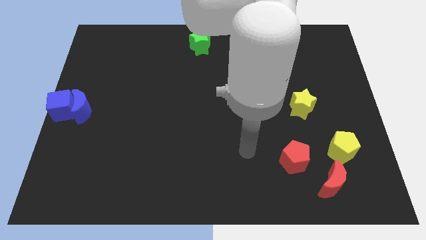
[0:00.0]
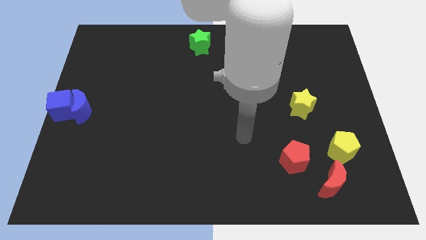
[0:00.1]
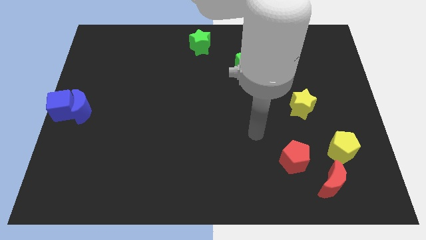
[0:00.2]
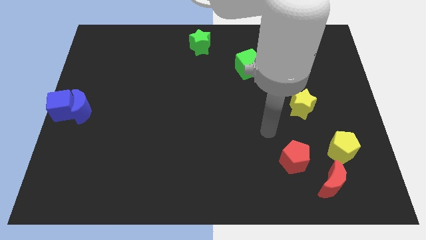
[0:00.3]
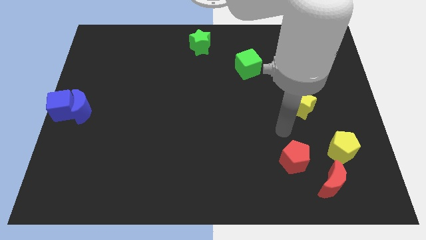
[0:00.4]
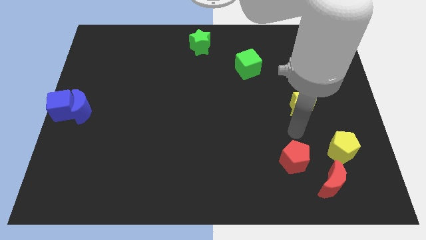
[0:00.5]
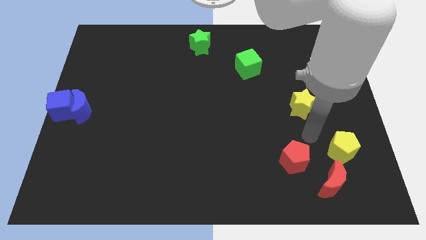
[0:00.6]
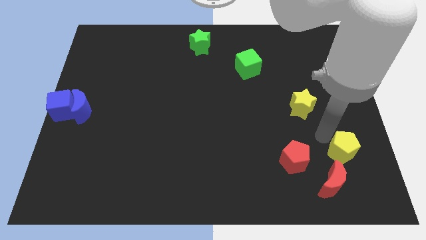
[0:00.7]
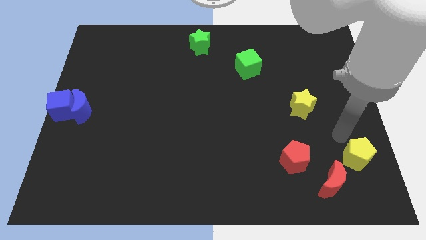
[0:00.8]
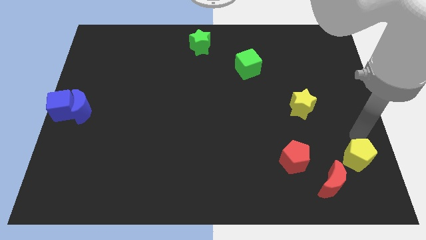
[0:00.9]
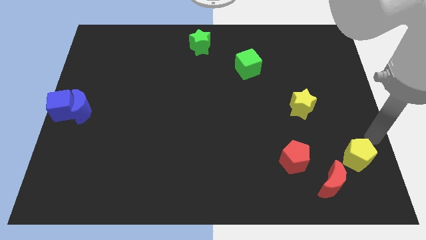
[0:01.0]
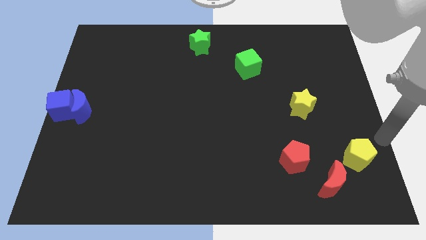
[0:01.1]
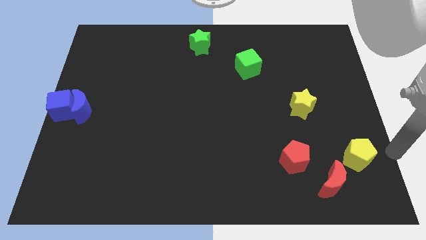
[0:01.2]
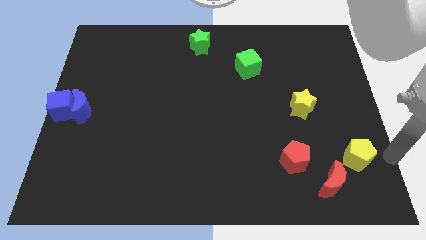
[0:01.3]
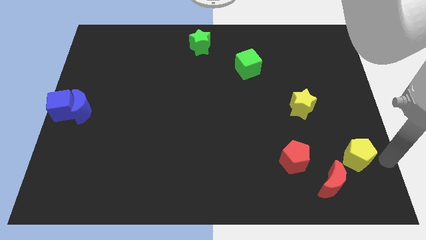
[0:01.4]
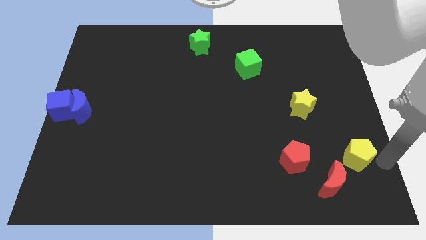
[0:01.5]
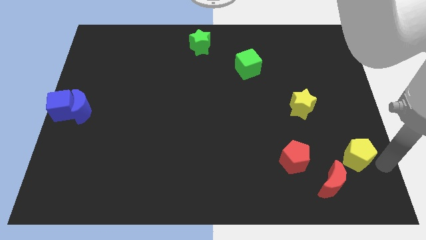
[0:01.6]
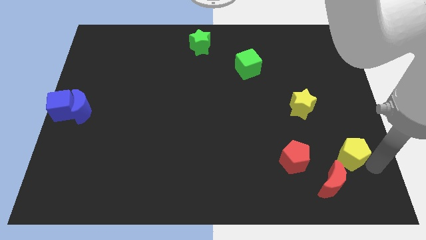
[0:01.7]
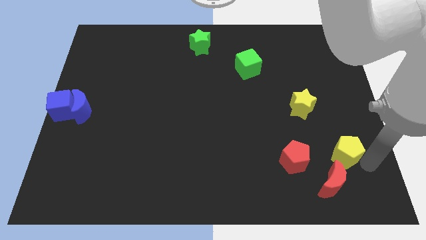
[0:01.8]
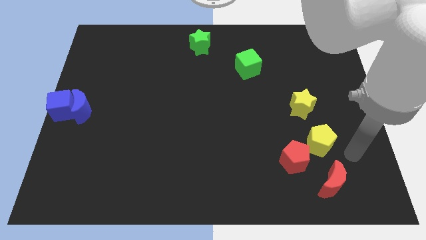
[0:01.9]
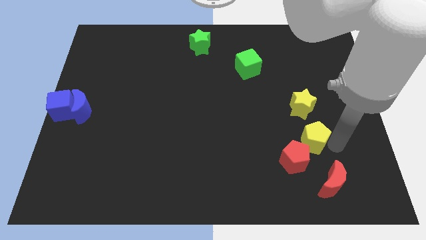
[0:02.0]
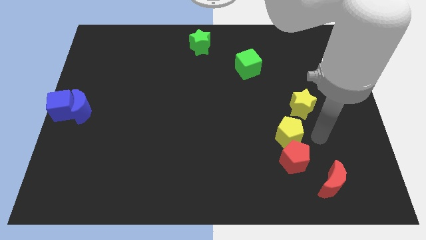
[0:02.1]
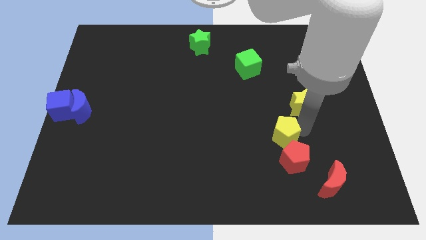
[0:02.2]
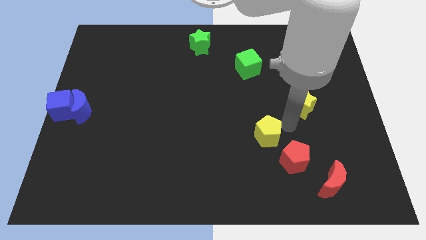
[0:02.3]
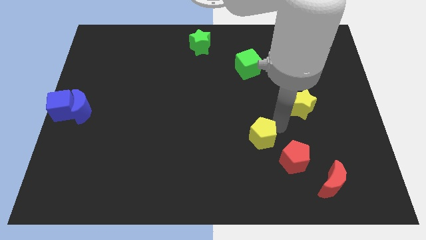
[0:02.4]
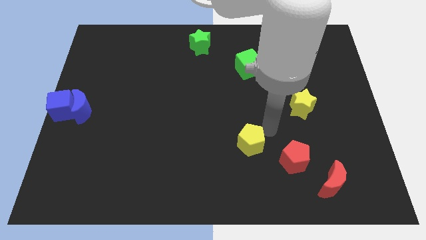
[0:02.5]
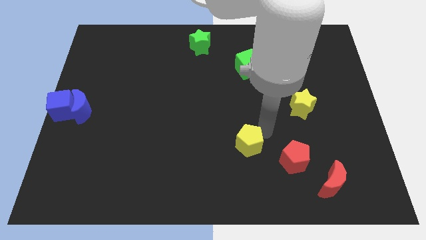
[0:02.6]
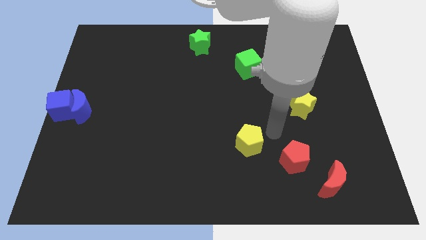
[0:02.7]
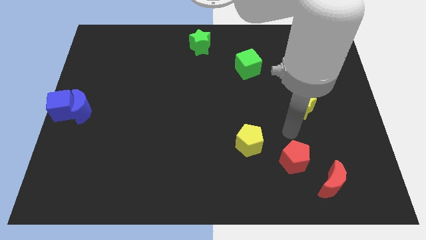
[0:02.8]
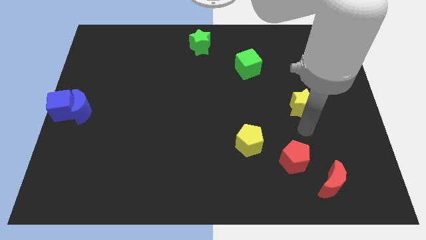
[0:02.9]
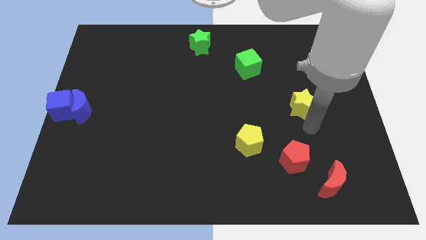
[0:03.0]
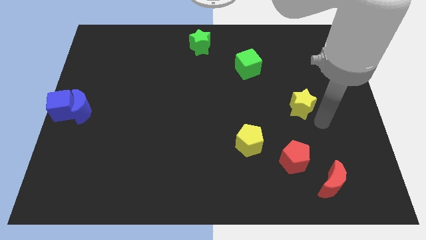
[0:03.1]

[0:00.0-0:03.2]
move the yellow pentagon to the left of the board

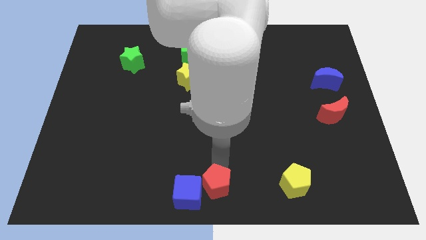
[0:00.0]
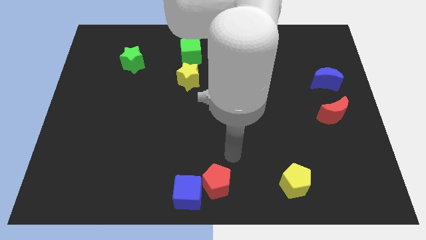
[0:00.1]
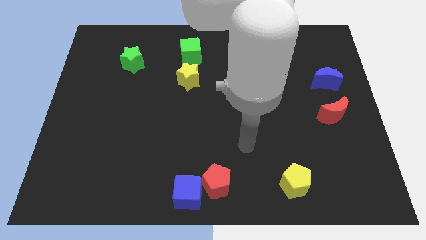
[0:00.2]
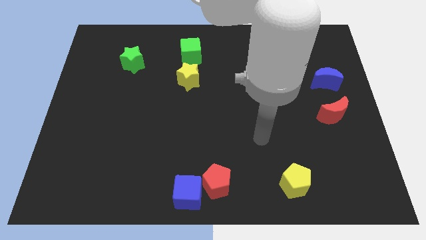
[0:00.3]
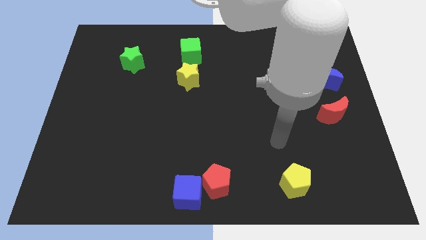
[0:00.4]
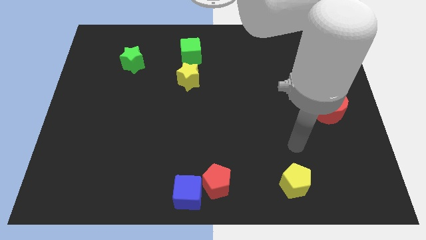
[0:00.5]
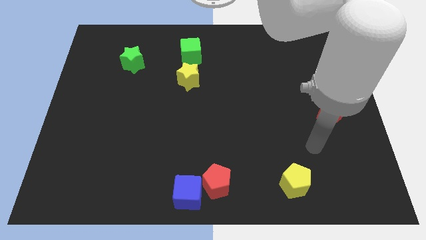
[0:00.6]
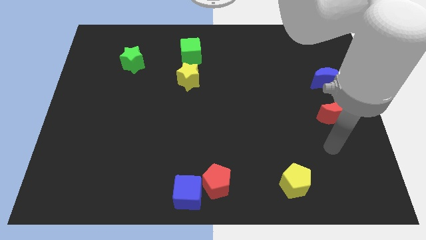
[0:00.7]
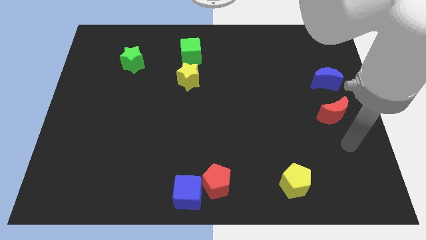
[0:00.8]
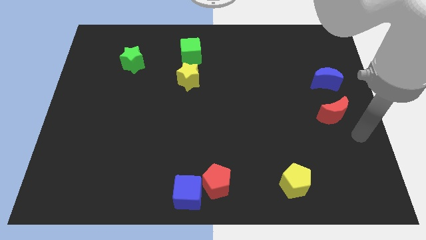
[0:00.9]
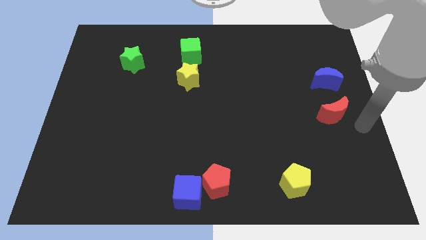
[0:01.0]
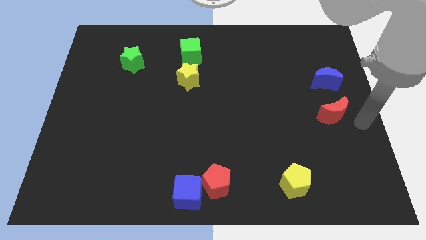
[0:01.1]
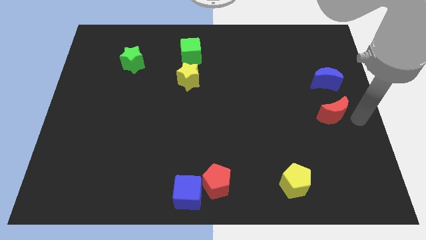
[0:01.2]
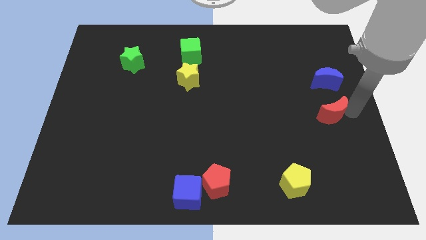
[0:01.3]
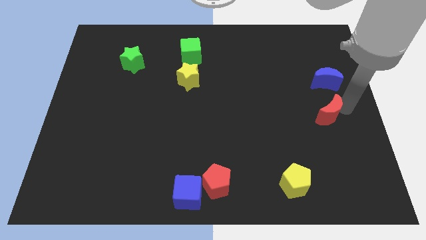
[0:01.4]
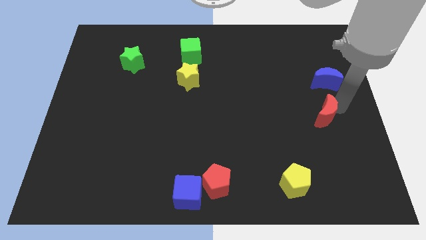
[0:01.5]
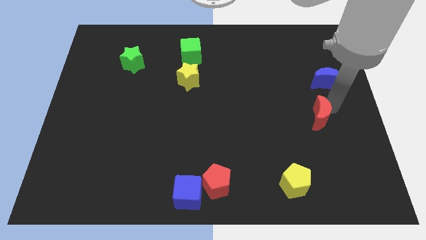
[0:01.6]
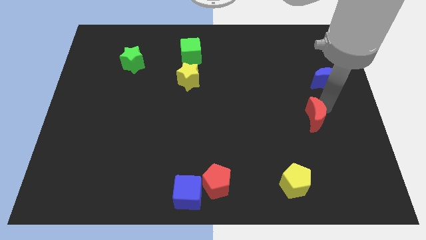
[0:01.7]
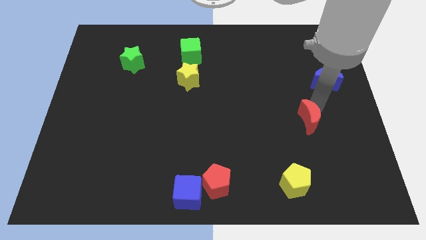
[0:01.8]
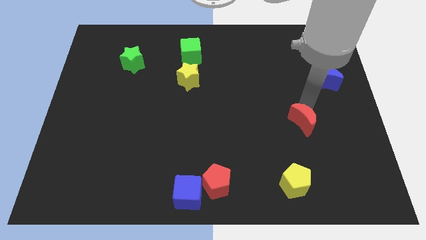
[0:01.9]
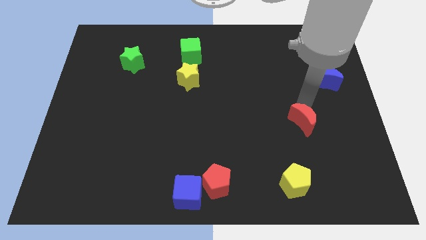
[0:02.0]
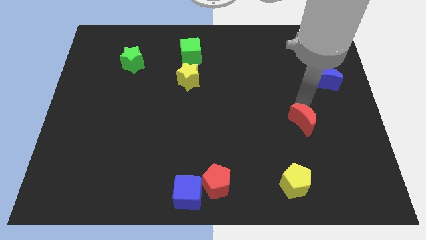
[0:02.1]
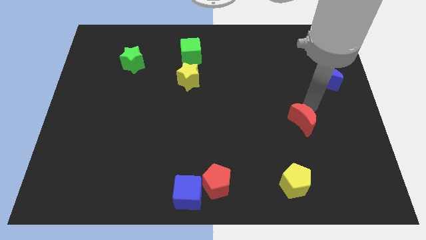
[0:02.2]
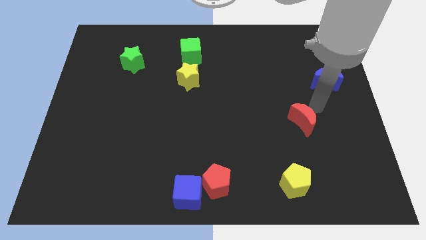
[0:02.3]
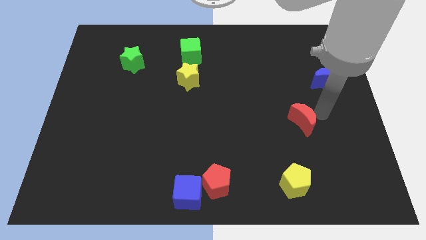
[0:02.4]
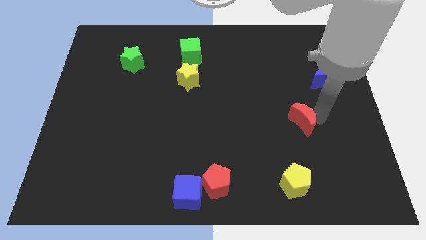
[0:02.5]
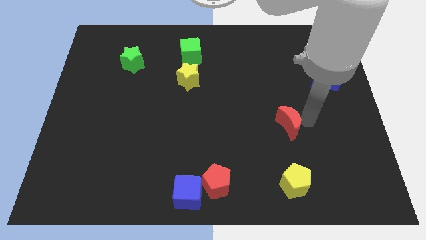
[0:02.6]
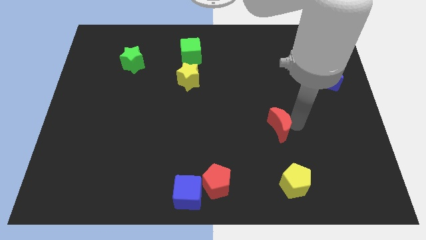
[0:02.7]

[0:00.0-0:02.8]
place the red crescent vertically above the yellow pentagon

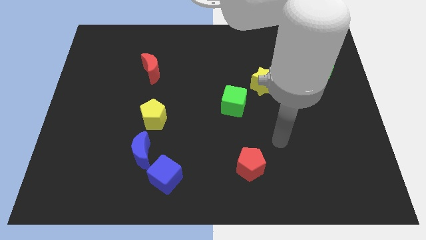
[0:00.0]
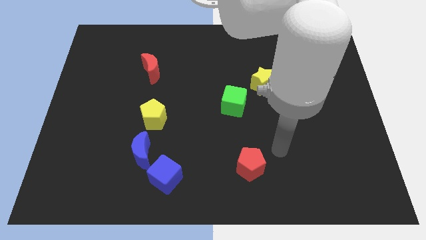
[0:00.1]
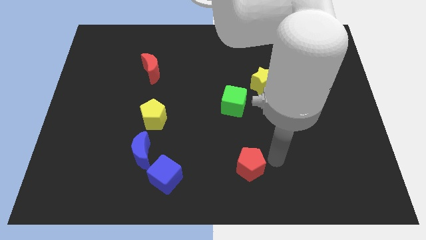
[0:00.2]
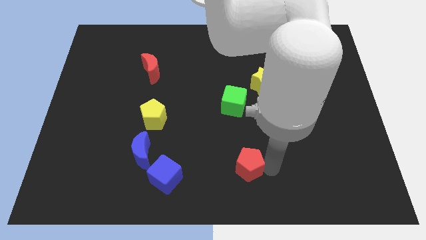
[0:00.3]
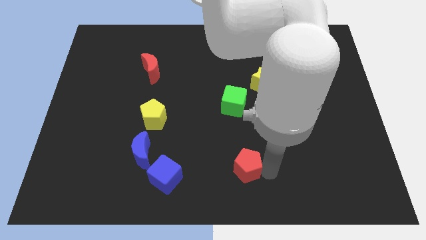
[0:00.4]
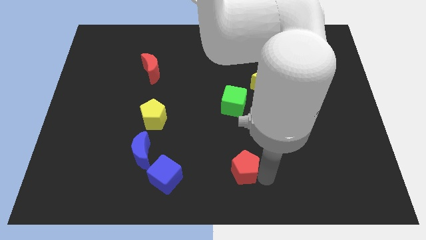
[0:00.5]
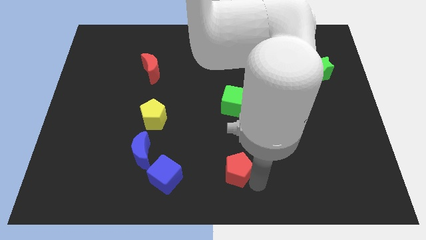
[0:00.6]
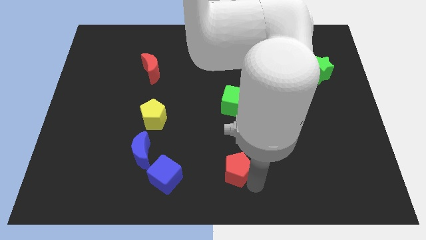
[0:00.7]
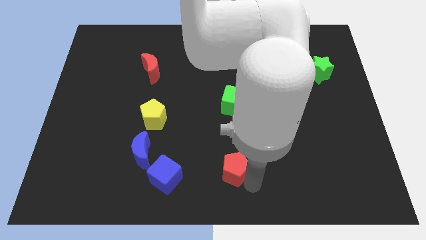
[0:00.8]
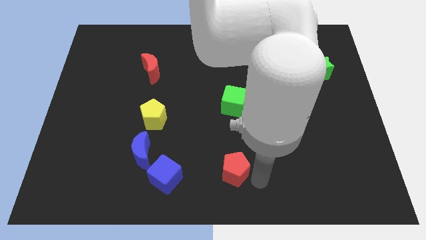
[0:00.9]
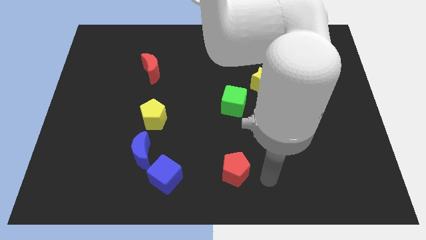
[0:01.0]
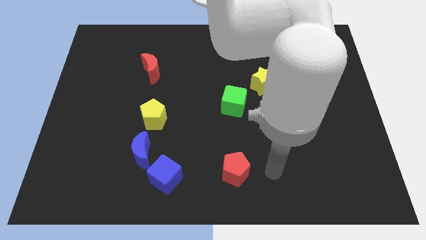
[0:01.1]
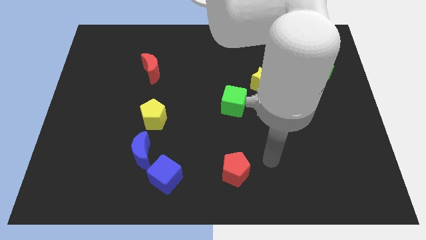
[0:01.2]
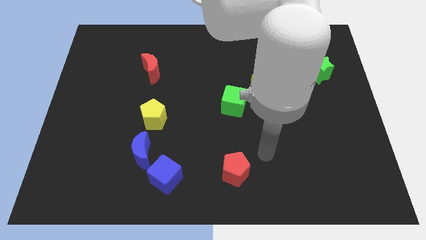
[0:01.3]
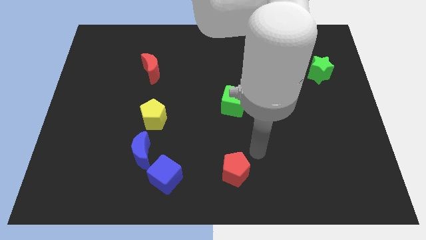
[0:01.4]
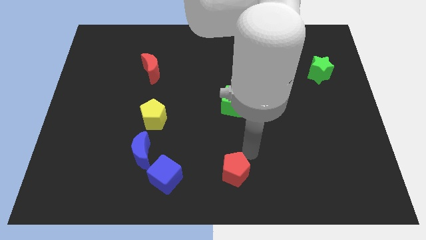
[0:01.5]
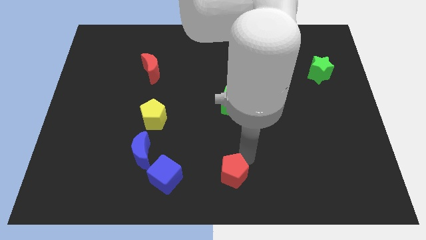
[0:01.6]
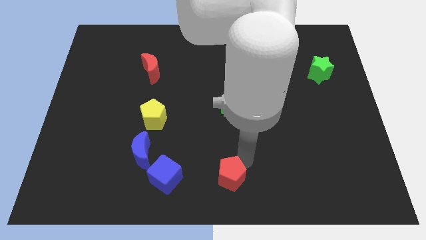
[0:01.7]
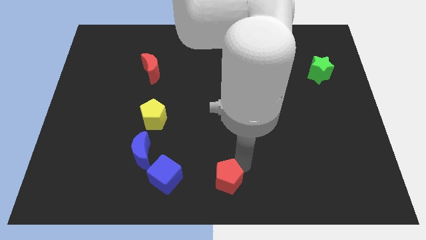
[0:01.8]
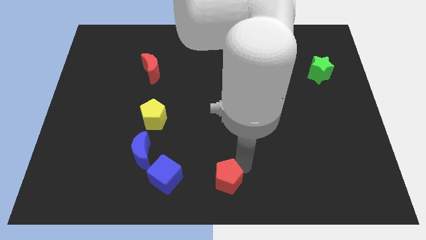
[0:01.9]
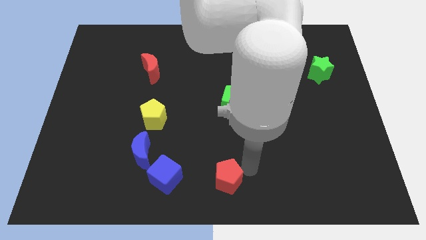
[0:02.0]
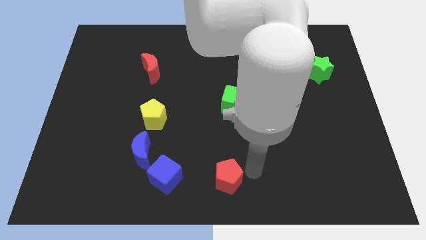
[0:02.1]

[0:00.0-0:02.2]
place the red pentagon below the green cube

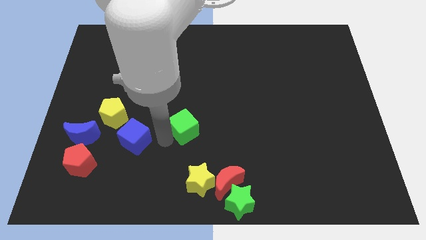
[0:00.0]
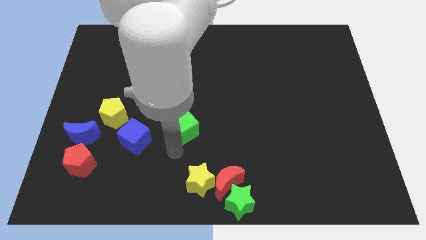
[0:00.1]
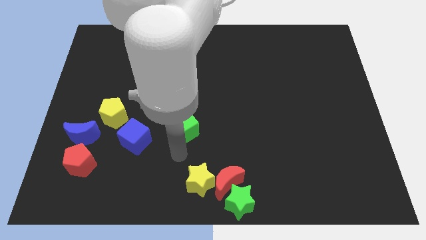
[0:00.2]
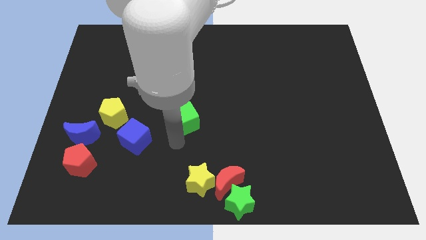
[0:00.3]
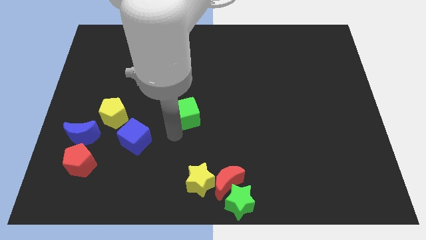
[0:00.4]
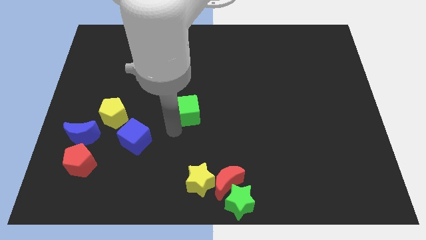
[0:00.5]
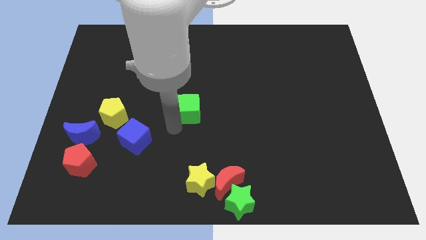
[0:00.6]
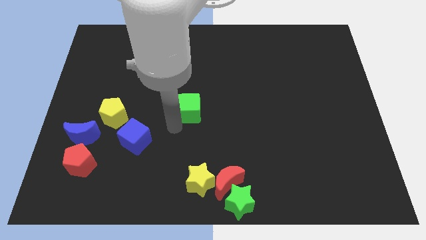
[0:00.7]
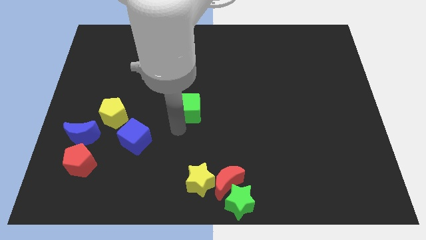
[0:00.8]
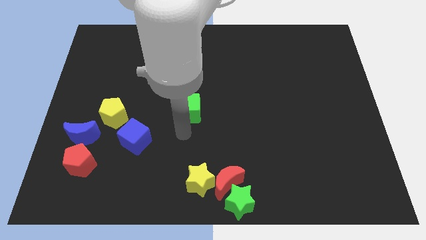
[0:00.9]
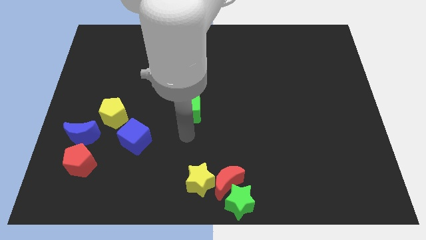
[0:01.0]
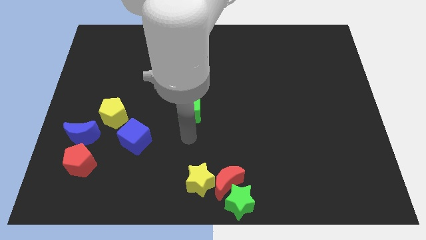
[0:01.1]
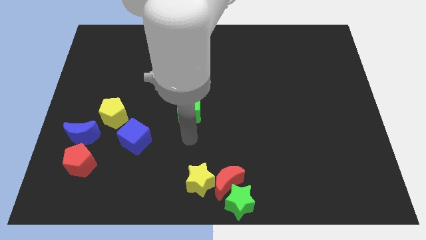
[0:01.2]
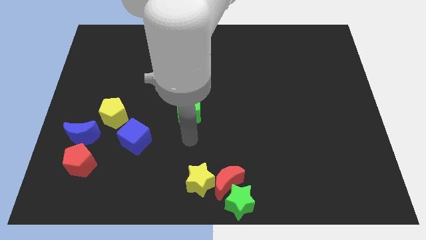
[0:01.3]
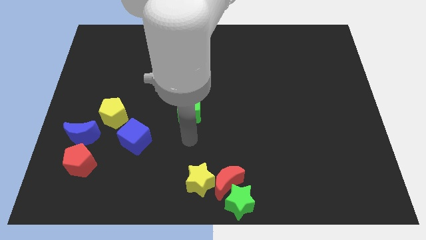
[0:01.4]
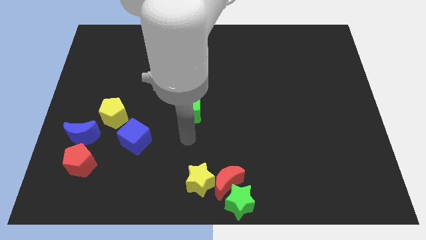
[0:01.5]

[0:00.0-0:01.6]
slightly move green cube
